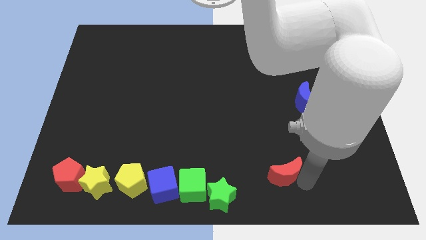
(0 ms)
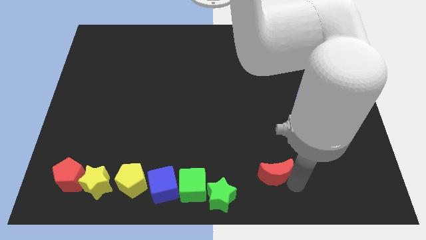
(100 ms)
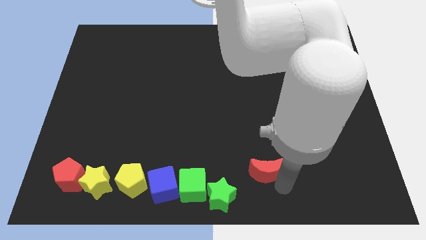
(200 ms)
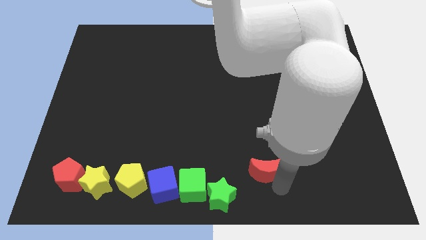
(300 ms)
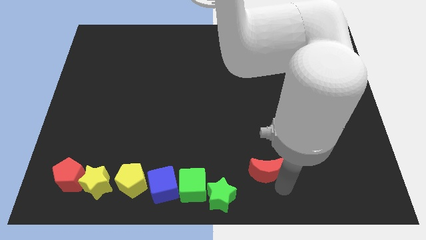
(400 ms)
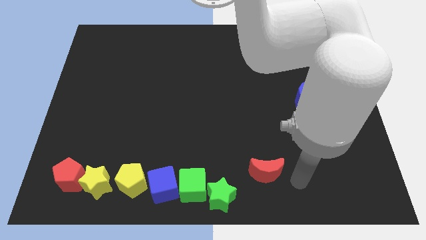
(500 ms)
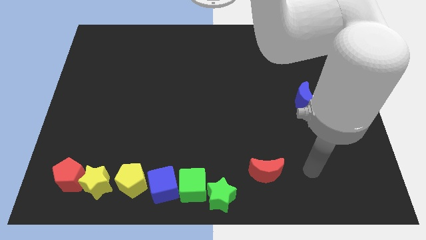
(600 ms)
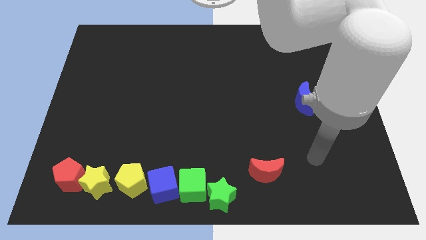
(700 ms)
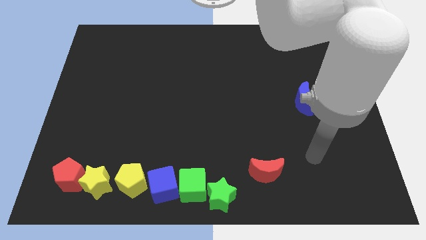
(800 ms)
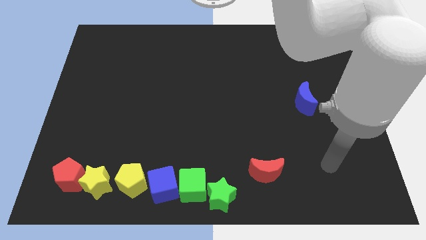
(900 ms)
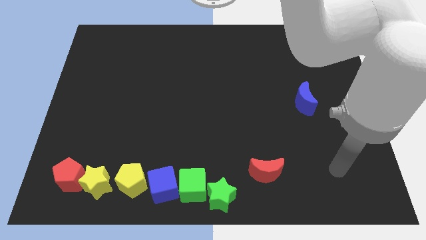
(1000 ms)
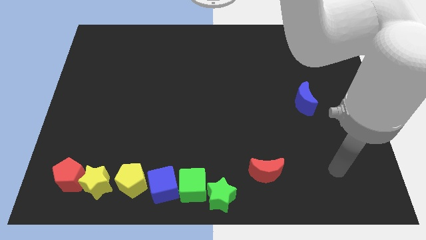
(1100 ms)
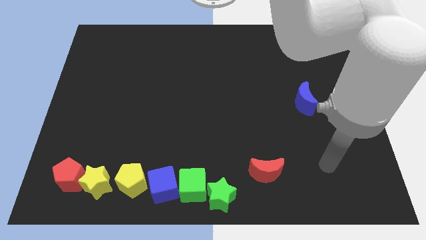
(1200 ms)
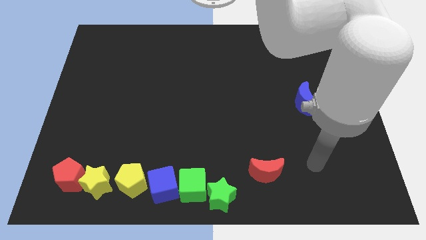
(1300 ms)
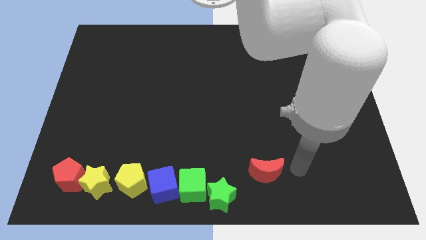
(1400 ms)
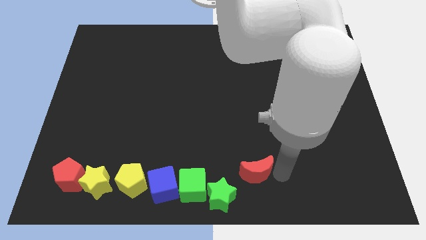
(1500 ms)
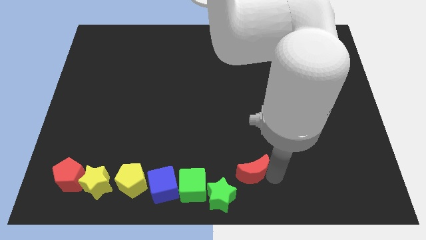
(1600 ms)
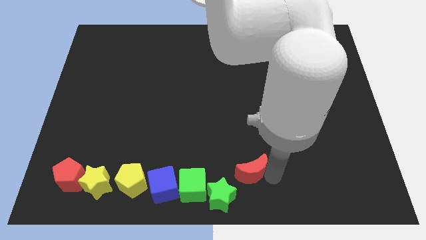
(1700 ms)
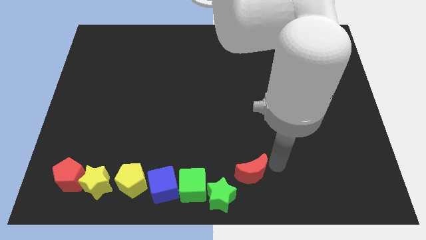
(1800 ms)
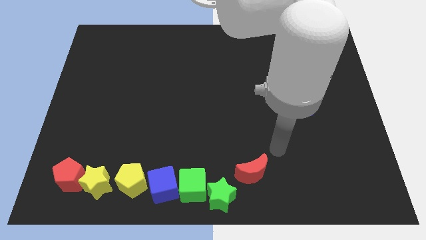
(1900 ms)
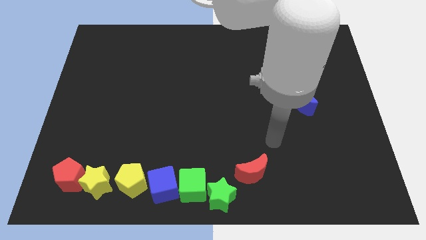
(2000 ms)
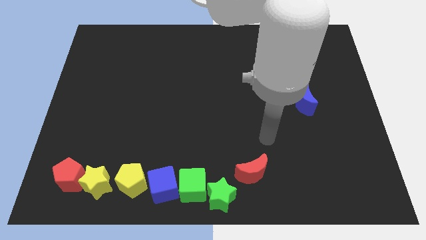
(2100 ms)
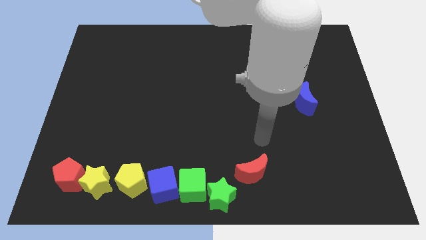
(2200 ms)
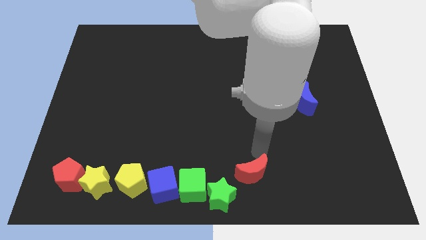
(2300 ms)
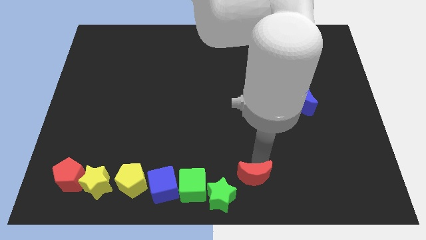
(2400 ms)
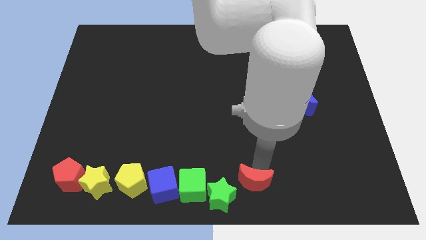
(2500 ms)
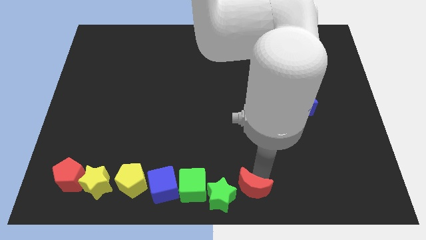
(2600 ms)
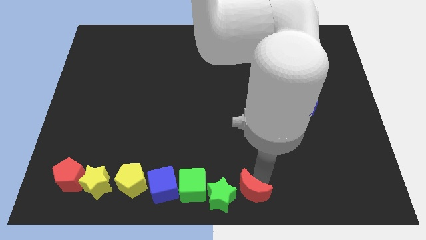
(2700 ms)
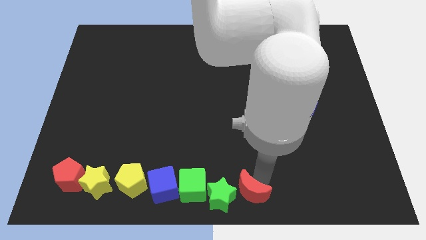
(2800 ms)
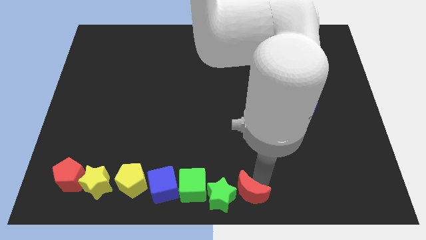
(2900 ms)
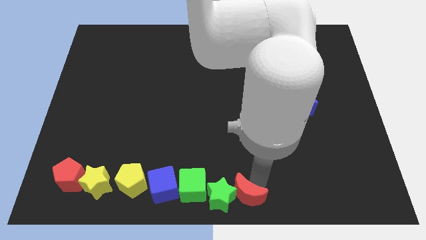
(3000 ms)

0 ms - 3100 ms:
move the red moon into the right side of the green star

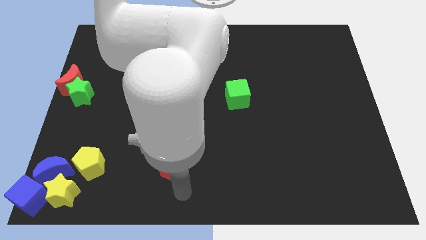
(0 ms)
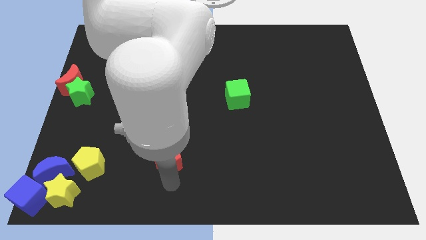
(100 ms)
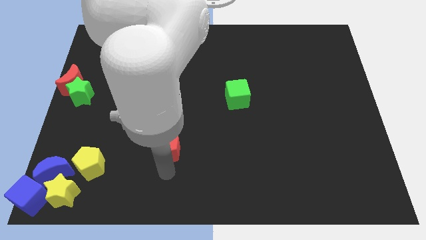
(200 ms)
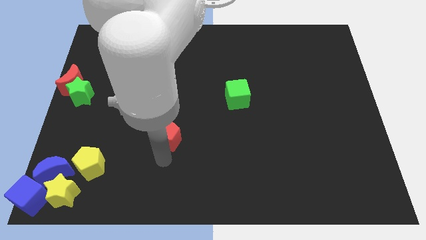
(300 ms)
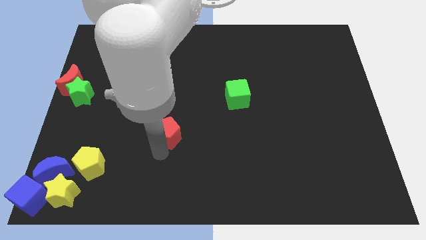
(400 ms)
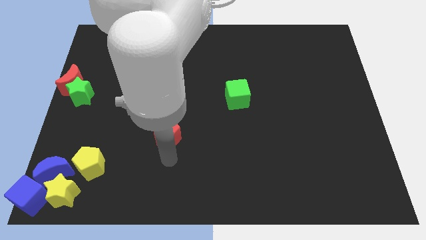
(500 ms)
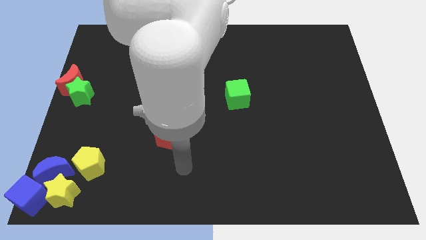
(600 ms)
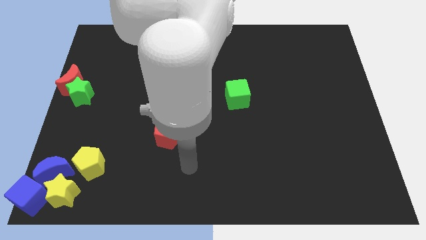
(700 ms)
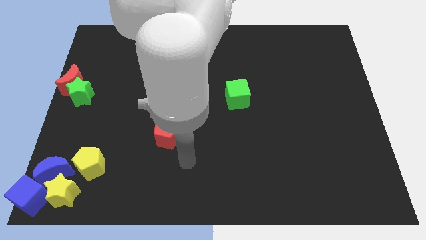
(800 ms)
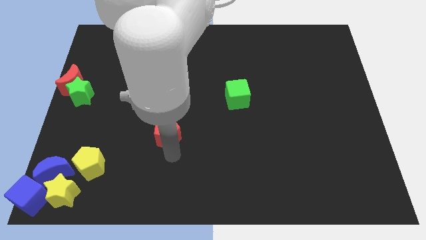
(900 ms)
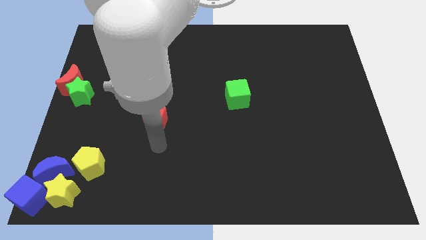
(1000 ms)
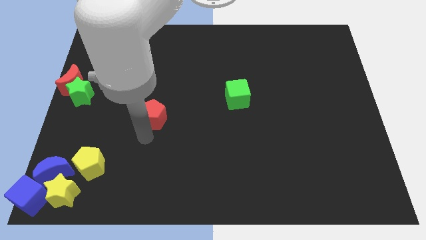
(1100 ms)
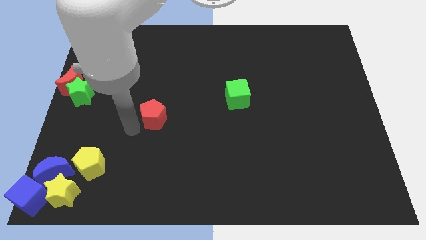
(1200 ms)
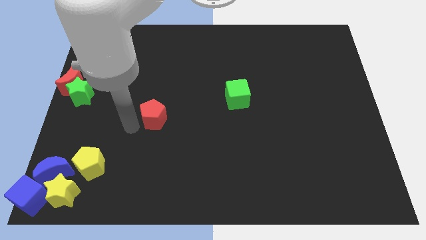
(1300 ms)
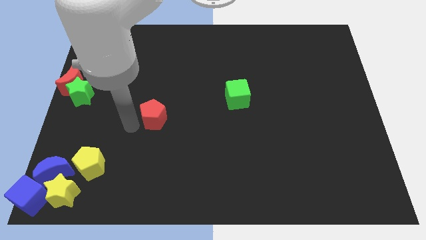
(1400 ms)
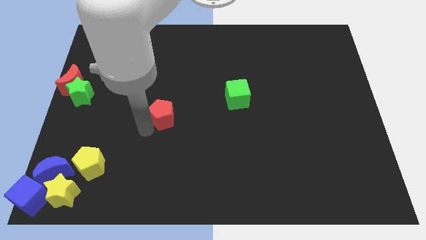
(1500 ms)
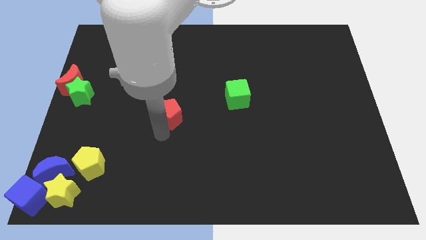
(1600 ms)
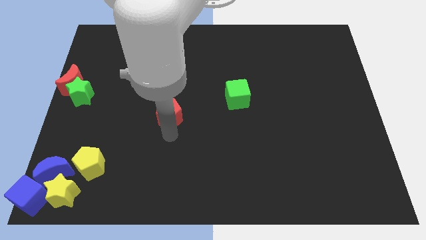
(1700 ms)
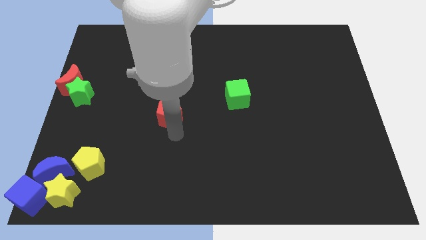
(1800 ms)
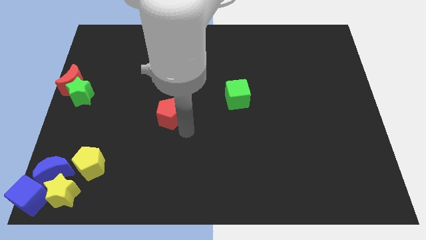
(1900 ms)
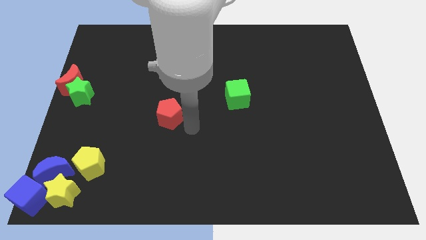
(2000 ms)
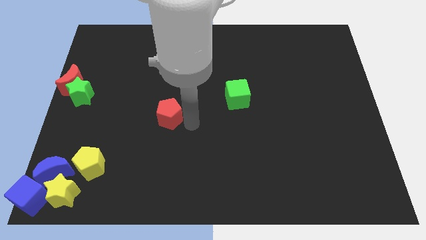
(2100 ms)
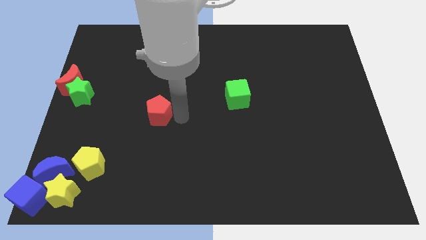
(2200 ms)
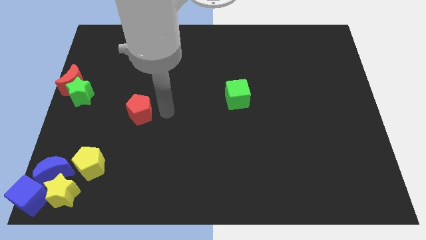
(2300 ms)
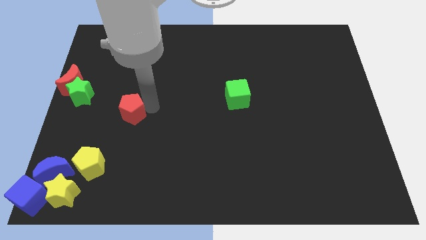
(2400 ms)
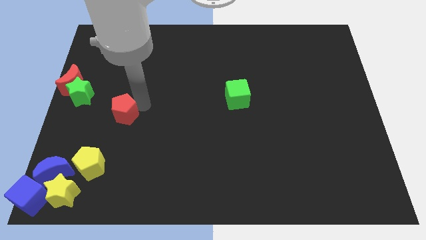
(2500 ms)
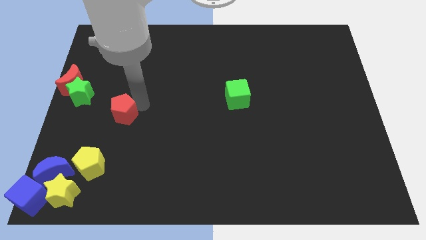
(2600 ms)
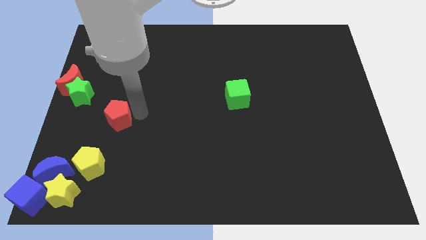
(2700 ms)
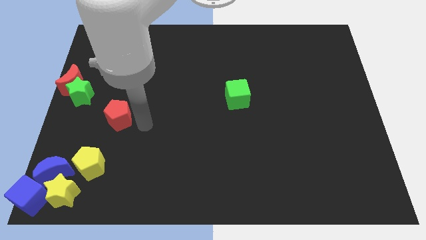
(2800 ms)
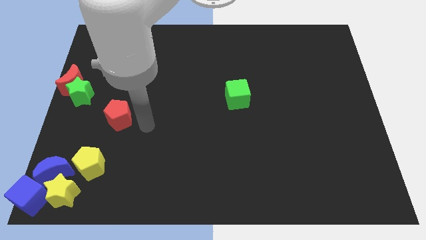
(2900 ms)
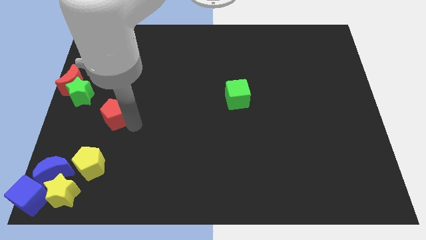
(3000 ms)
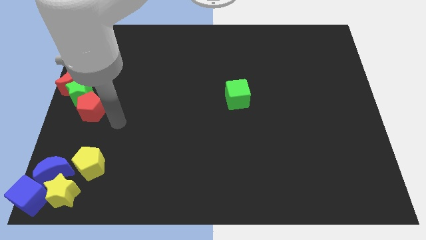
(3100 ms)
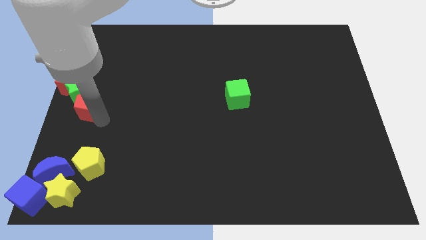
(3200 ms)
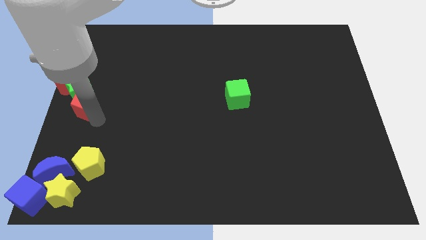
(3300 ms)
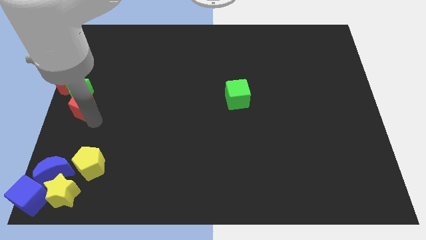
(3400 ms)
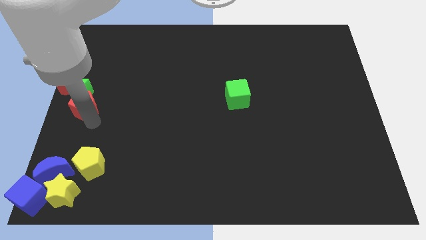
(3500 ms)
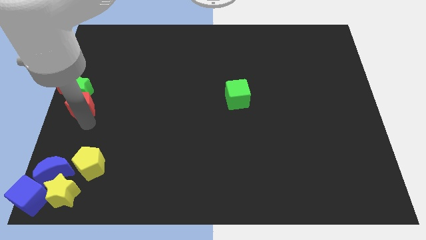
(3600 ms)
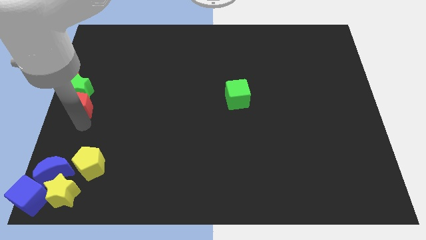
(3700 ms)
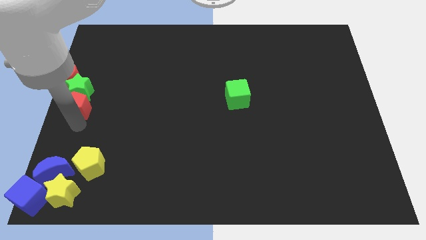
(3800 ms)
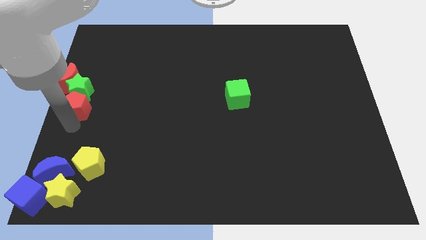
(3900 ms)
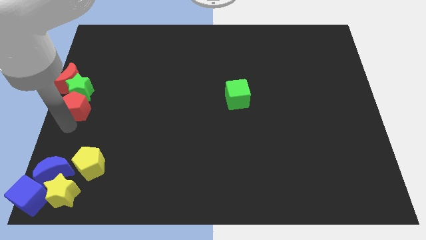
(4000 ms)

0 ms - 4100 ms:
place the red pentagon to the bottom of the green star

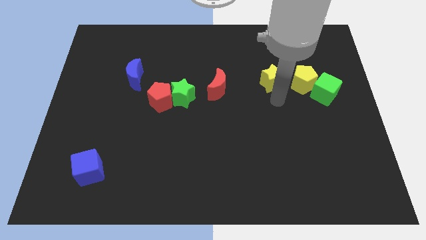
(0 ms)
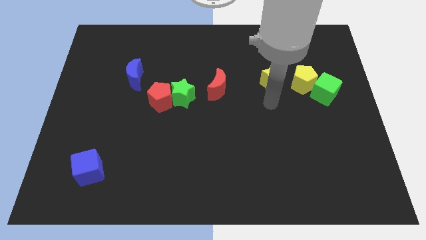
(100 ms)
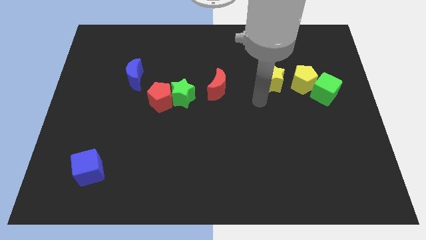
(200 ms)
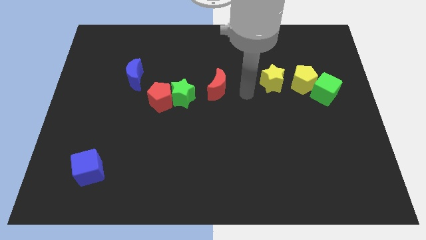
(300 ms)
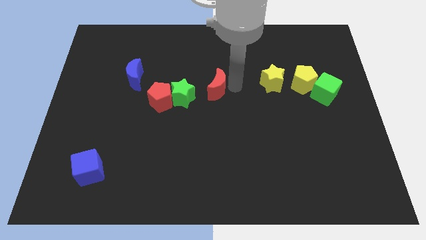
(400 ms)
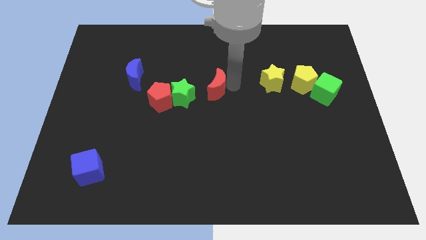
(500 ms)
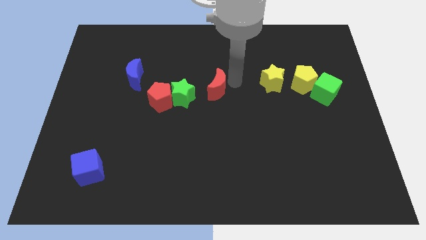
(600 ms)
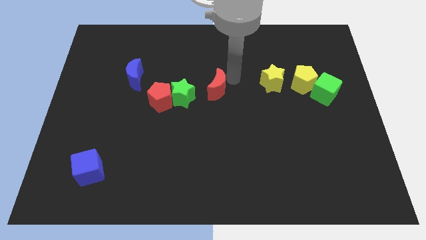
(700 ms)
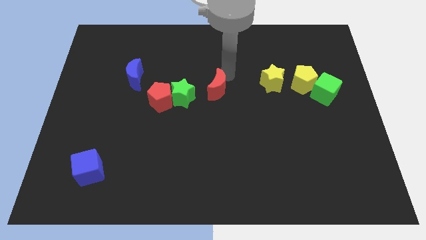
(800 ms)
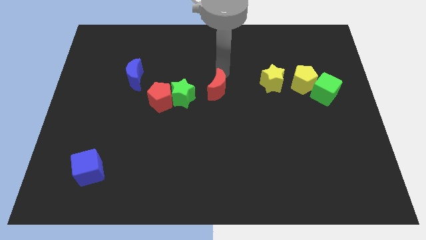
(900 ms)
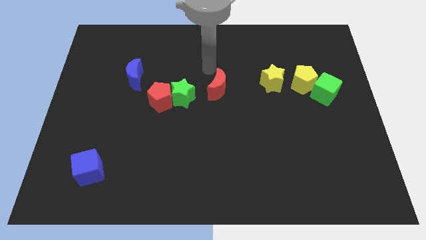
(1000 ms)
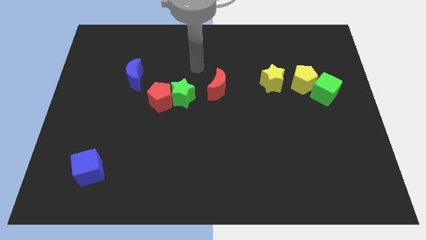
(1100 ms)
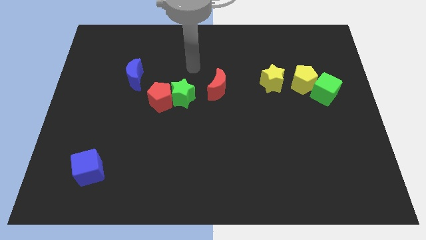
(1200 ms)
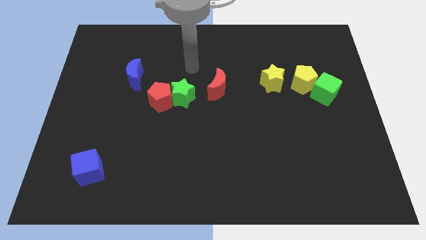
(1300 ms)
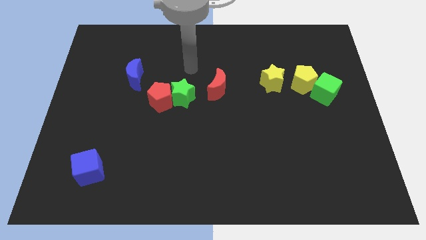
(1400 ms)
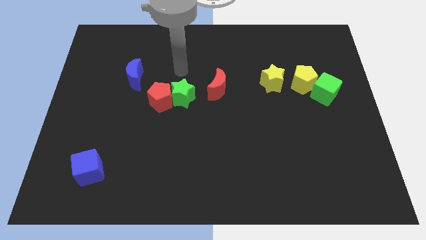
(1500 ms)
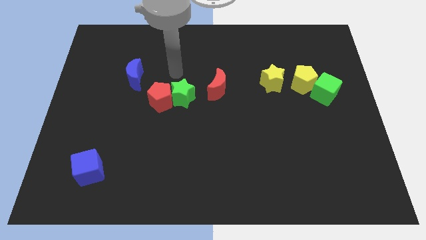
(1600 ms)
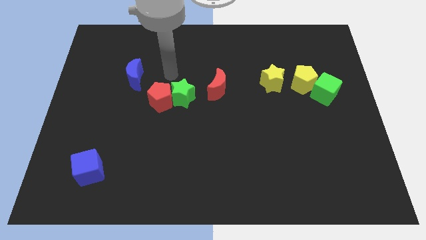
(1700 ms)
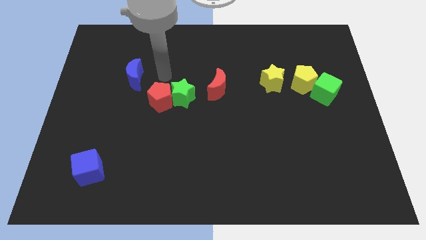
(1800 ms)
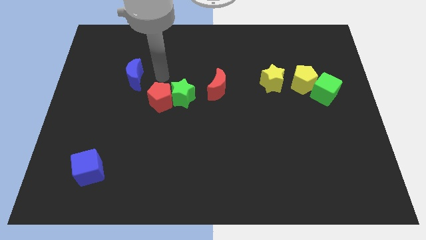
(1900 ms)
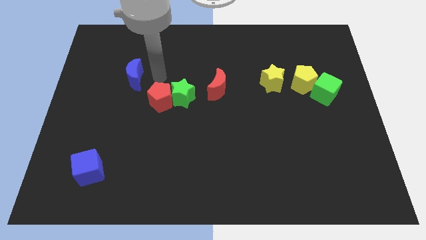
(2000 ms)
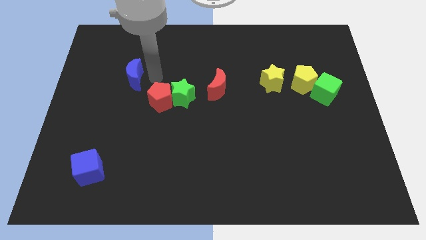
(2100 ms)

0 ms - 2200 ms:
put your arm at the top of red pentagon
